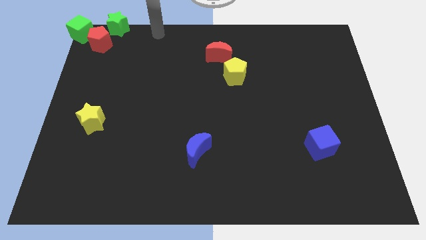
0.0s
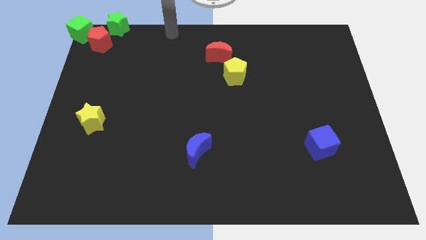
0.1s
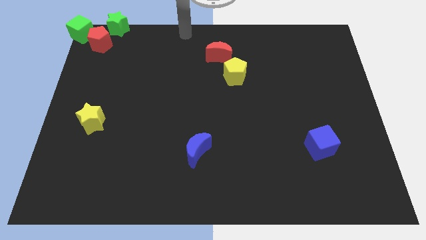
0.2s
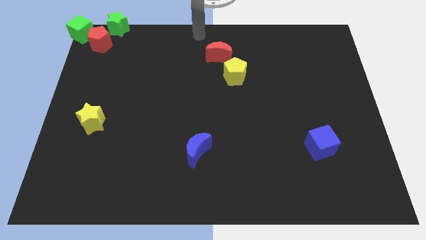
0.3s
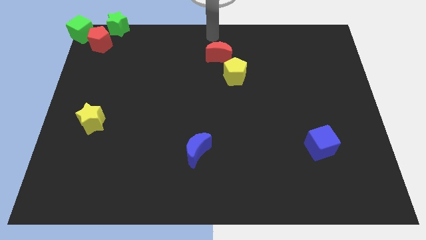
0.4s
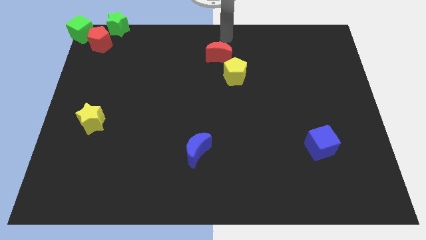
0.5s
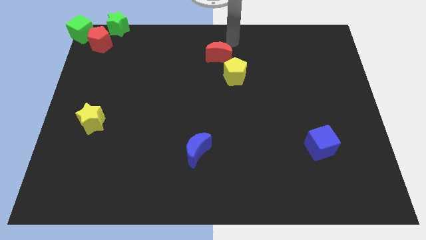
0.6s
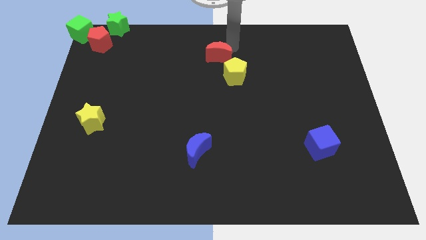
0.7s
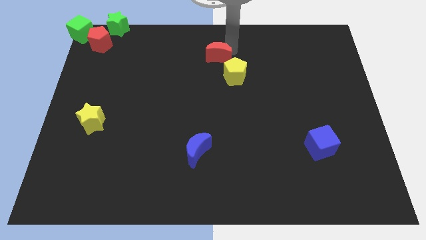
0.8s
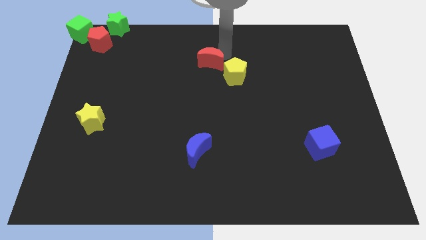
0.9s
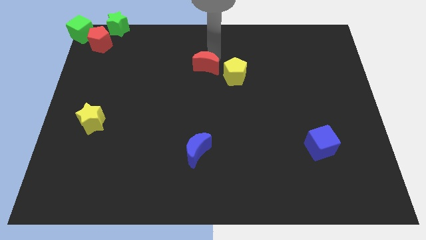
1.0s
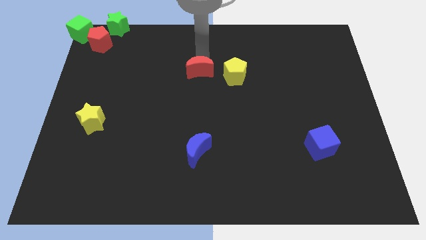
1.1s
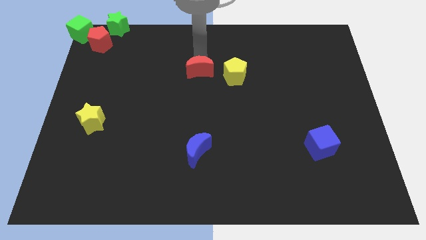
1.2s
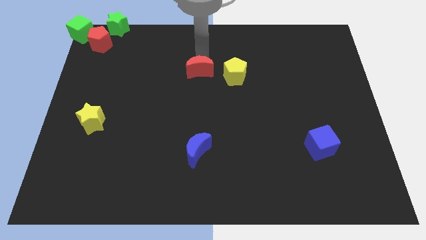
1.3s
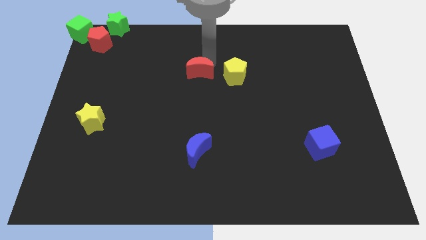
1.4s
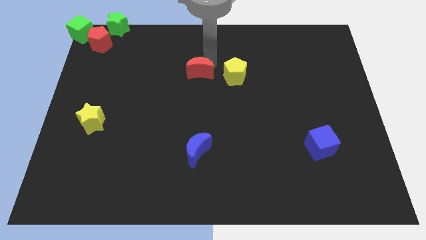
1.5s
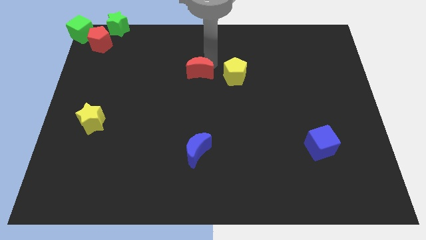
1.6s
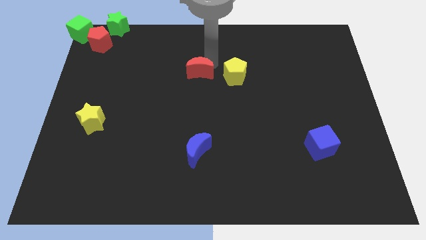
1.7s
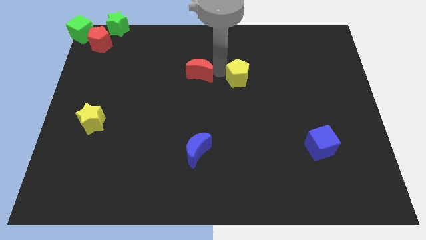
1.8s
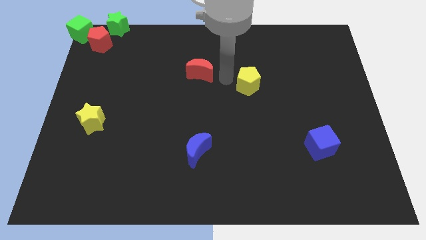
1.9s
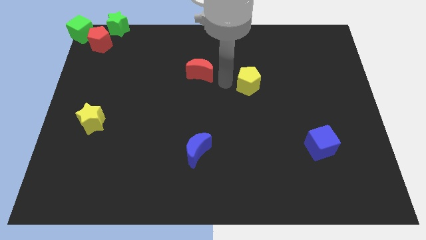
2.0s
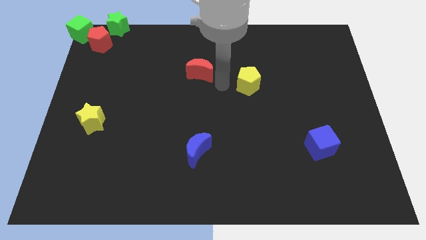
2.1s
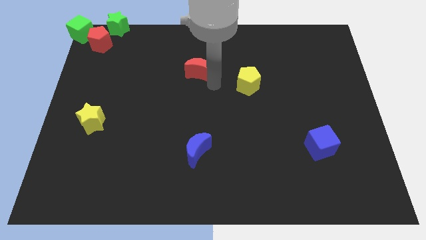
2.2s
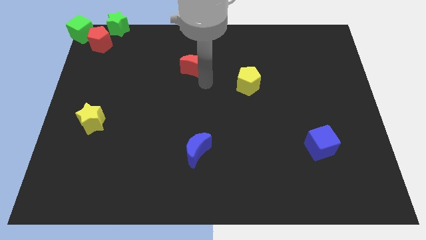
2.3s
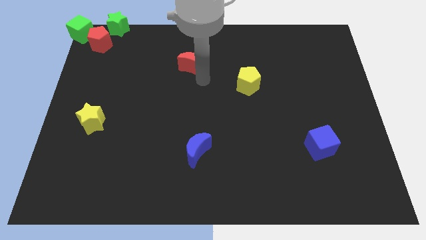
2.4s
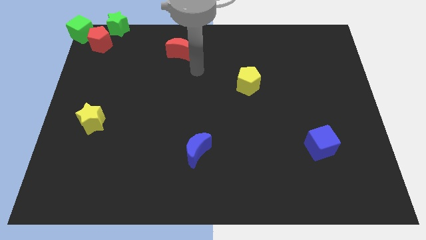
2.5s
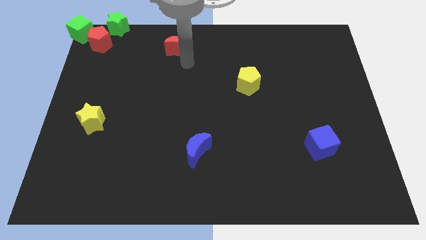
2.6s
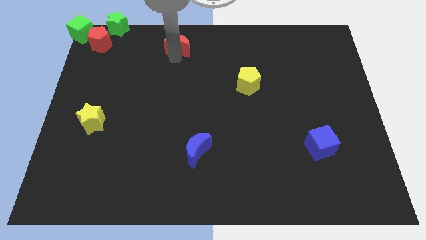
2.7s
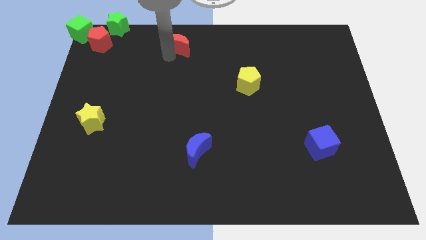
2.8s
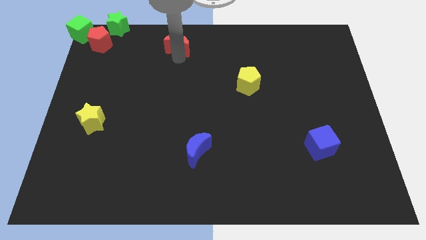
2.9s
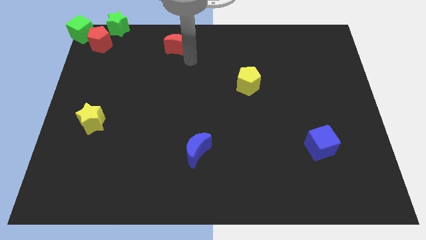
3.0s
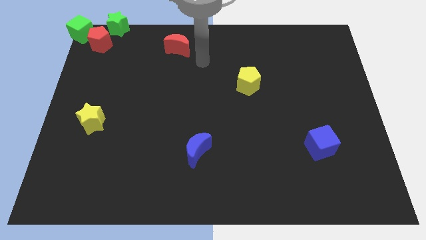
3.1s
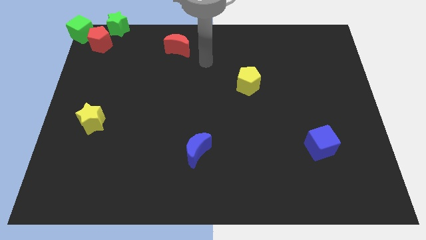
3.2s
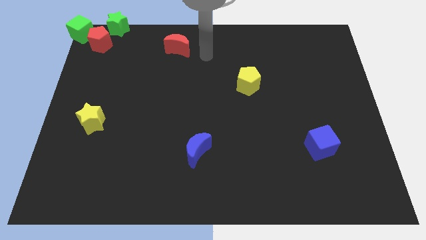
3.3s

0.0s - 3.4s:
move the red crescent to the top centre of the board

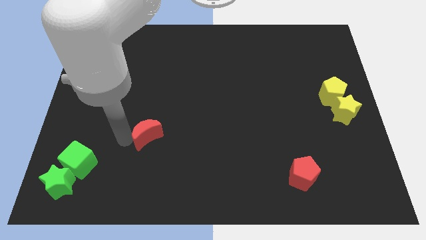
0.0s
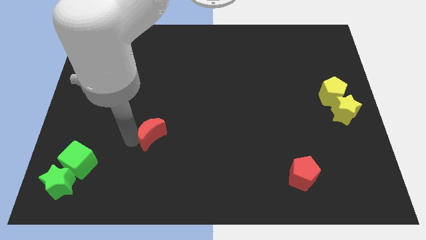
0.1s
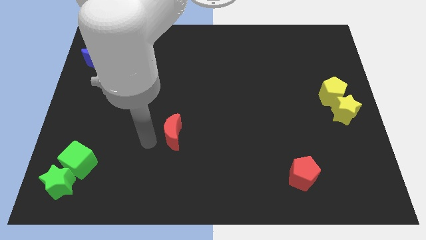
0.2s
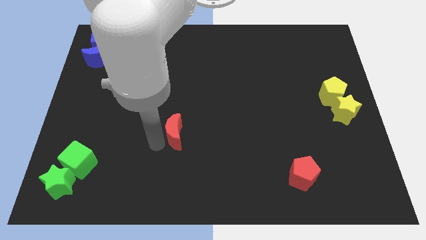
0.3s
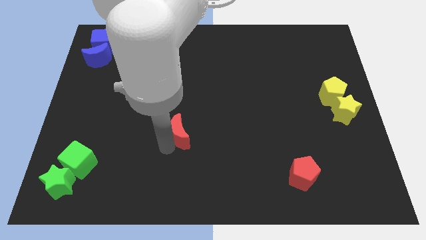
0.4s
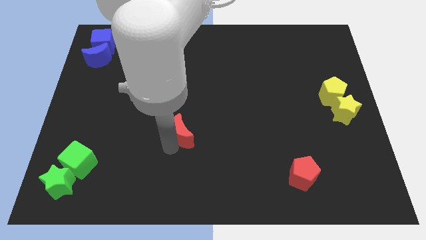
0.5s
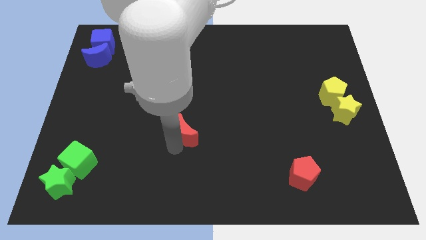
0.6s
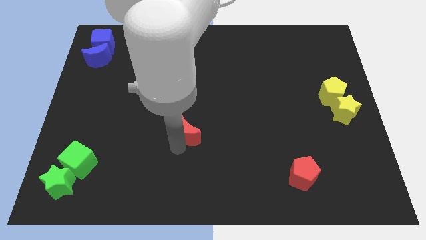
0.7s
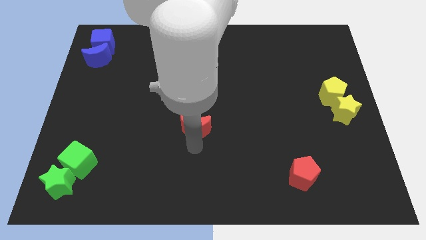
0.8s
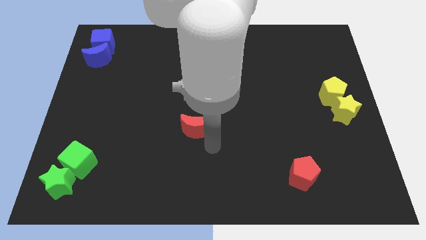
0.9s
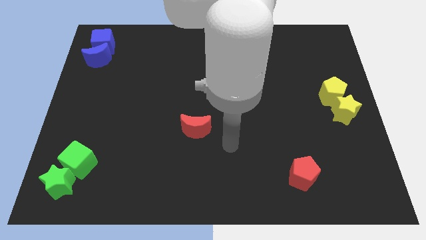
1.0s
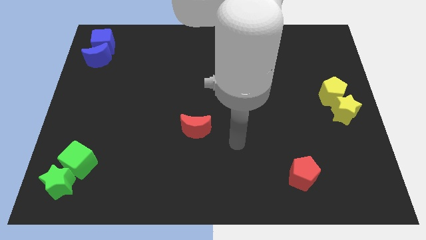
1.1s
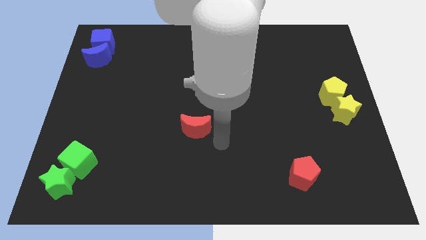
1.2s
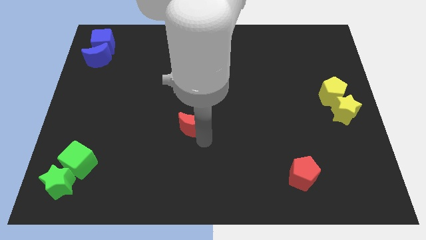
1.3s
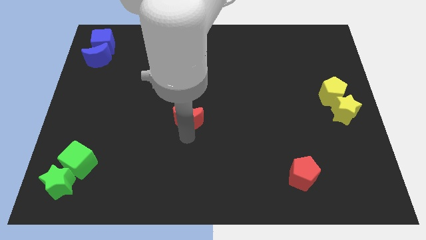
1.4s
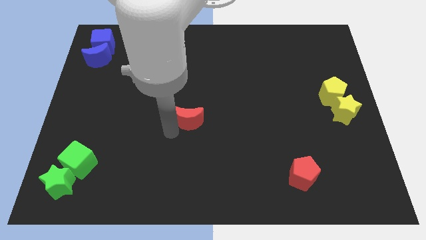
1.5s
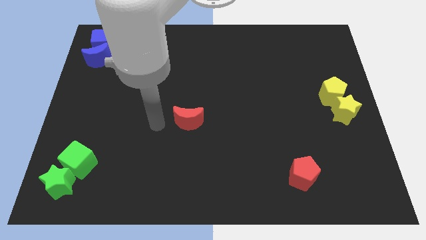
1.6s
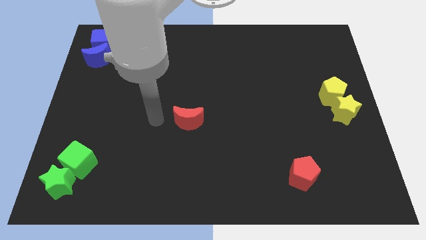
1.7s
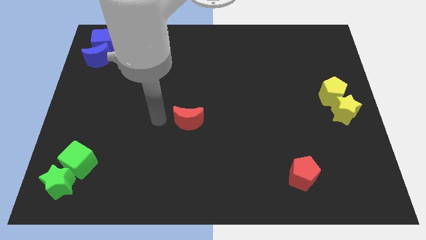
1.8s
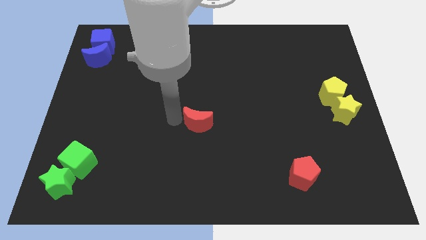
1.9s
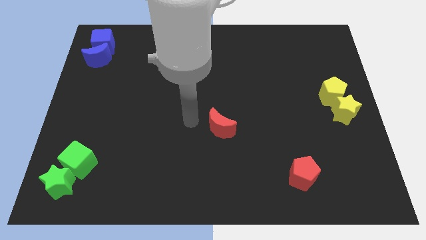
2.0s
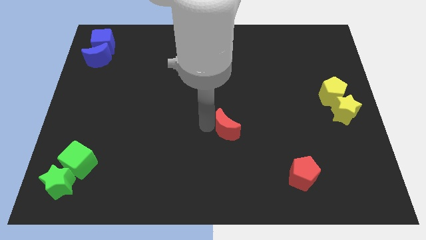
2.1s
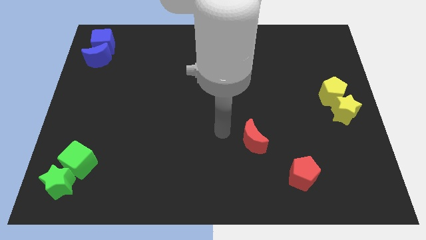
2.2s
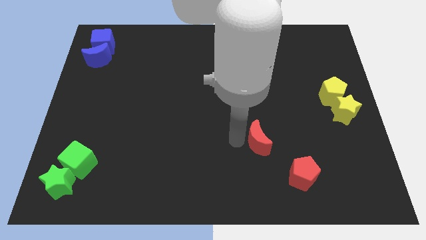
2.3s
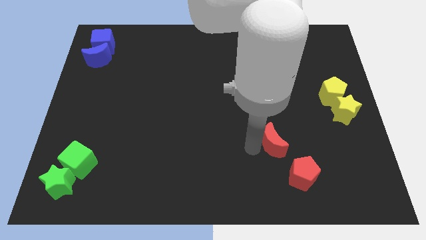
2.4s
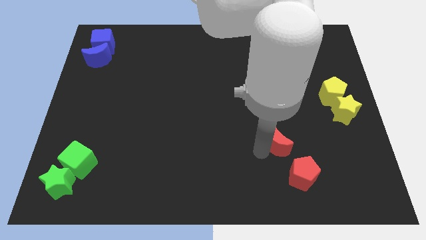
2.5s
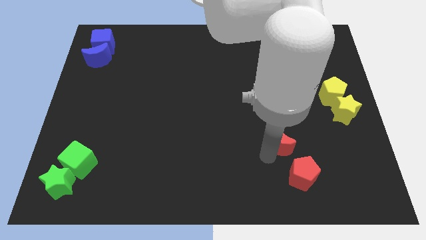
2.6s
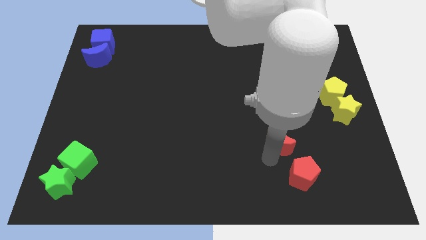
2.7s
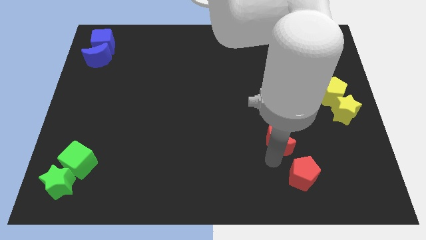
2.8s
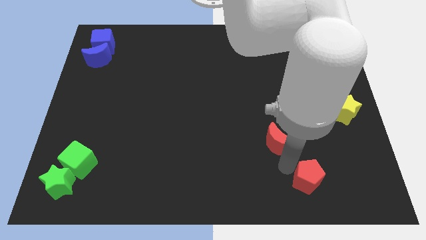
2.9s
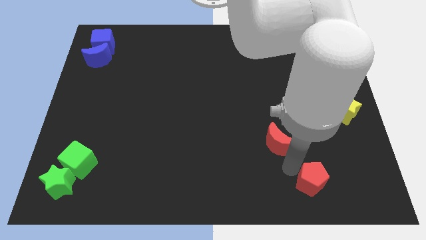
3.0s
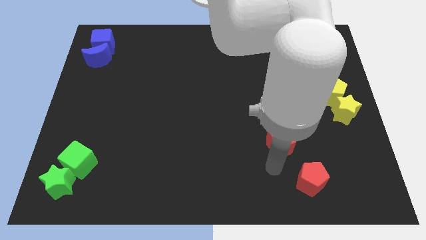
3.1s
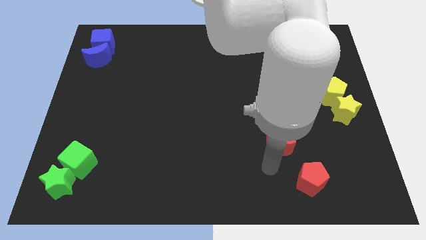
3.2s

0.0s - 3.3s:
push the red crescent diagonally to the top left of the red pentagon

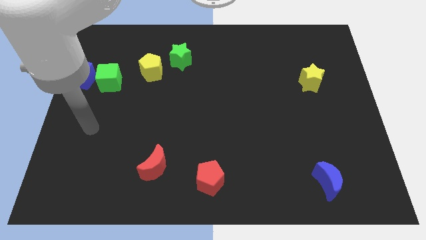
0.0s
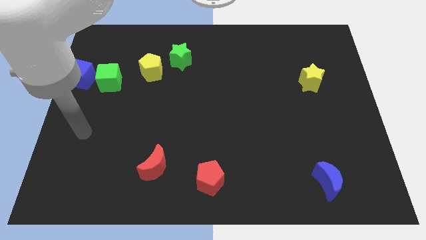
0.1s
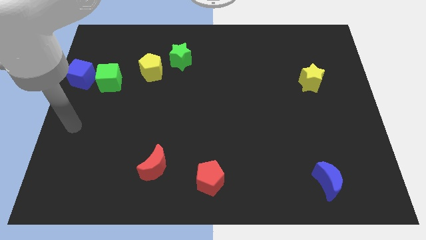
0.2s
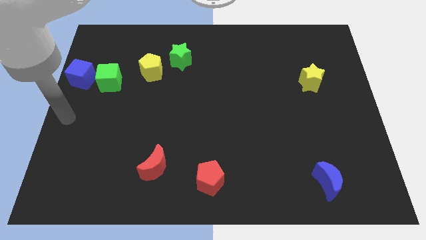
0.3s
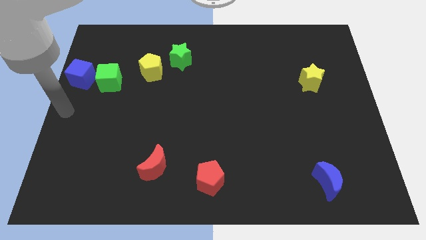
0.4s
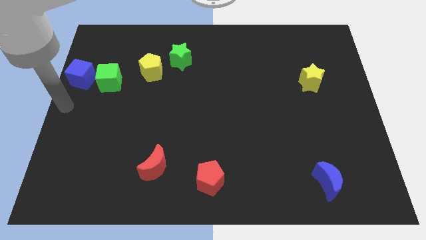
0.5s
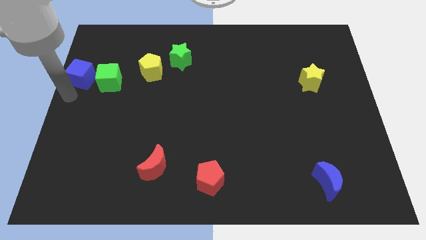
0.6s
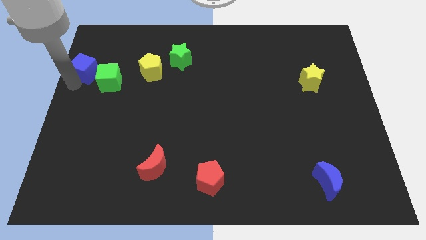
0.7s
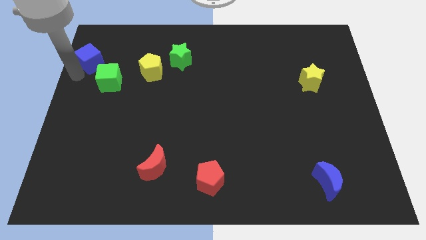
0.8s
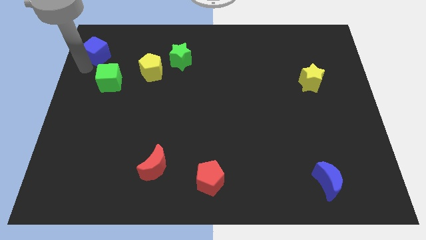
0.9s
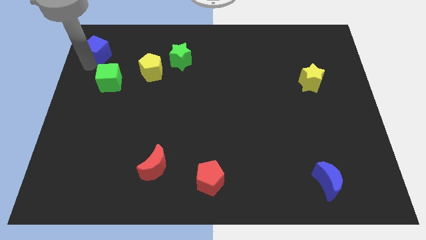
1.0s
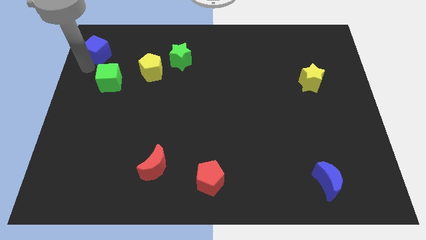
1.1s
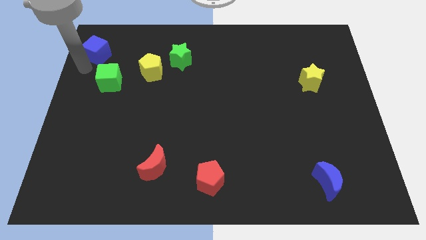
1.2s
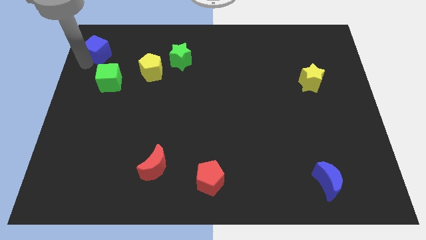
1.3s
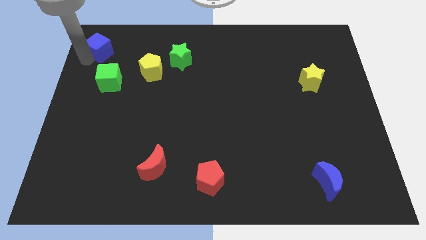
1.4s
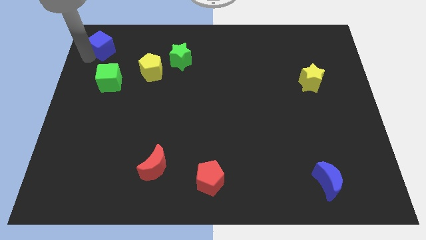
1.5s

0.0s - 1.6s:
push the blue cube upwards

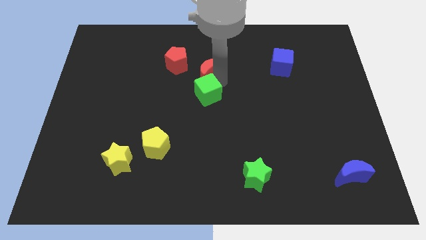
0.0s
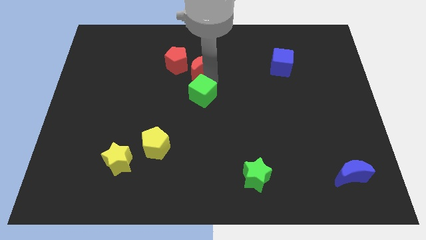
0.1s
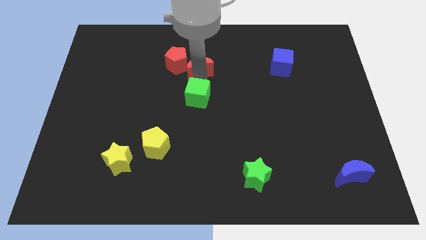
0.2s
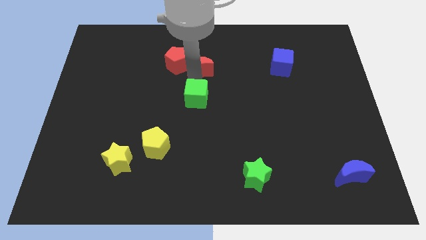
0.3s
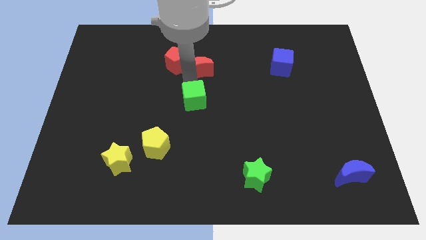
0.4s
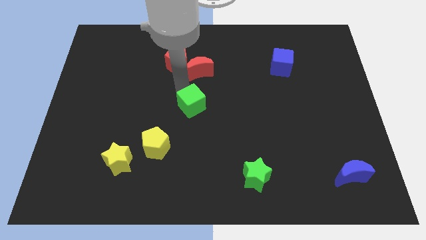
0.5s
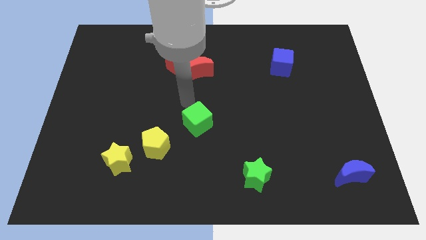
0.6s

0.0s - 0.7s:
move the green cube to the center of the board

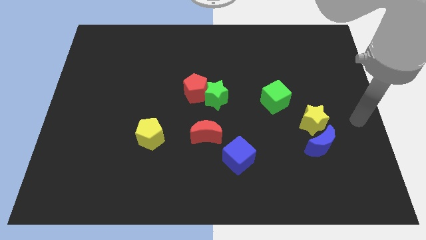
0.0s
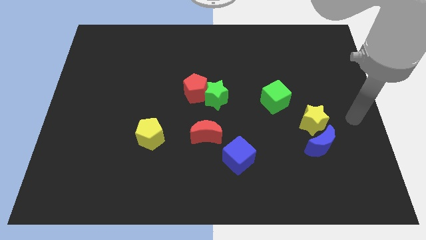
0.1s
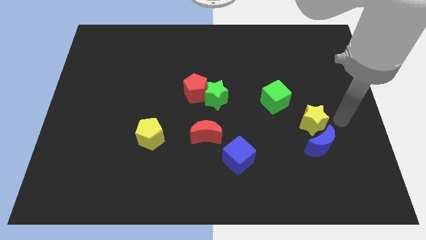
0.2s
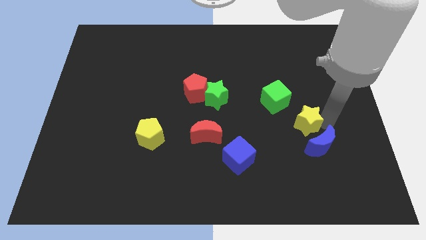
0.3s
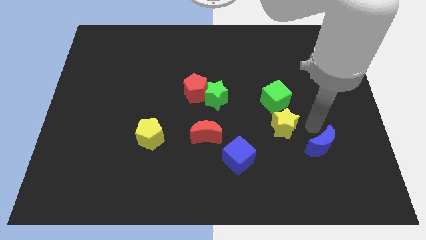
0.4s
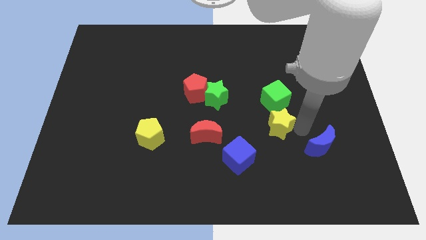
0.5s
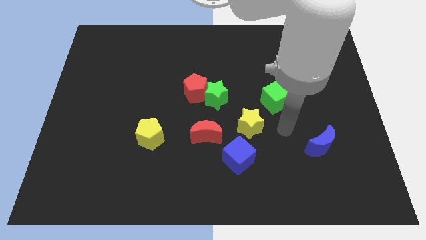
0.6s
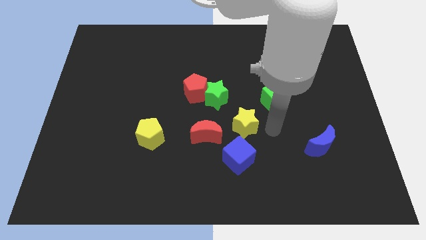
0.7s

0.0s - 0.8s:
push yellow star towards center
